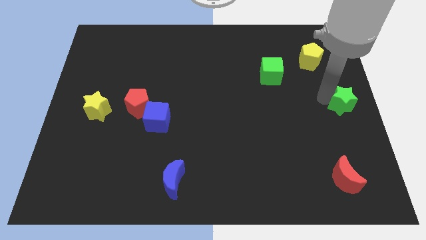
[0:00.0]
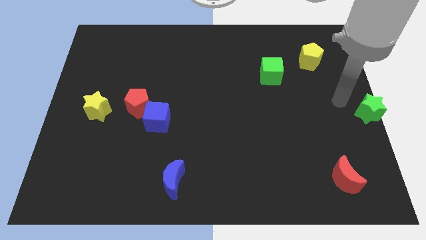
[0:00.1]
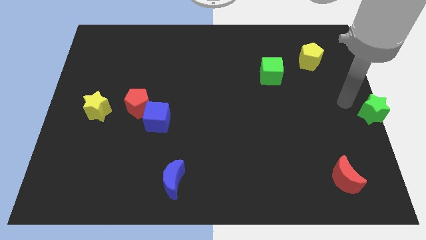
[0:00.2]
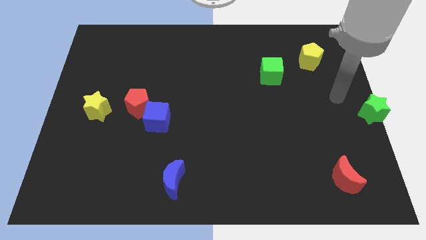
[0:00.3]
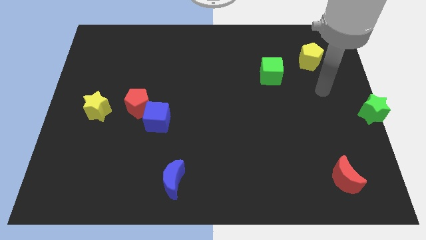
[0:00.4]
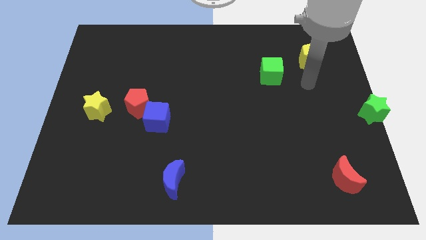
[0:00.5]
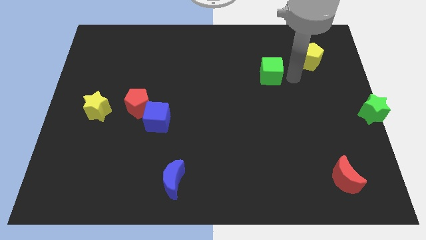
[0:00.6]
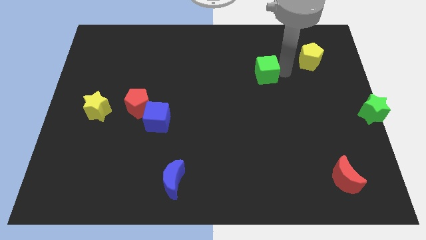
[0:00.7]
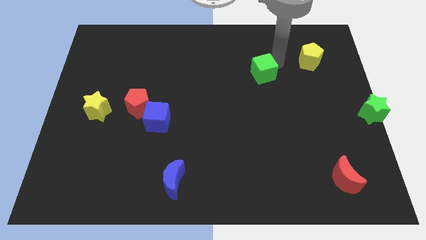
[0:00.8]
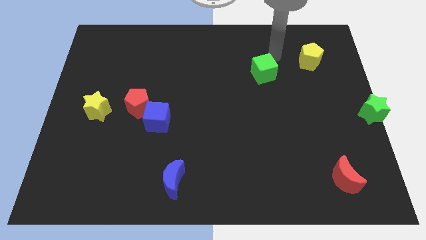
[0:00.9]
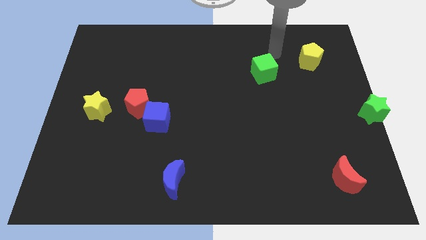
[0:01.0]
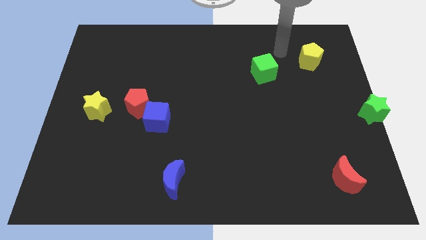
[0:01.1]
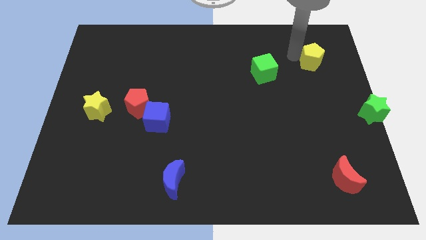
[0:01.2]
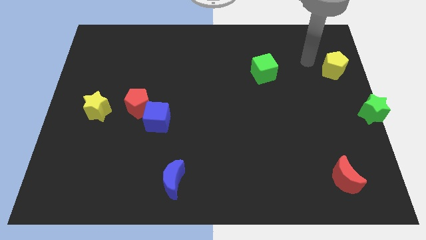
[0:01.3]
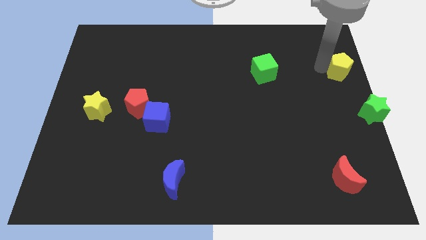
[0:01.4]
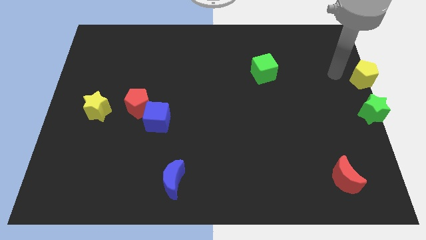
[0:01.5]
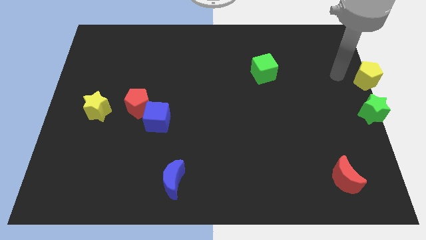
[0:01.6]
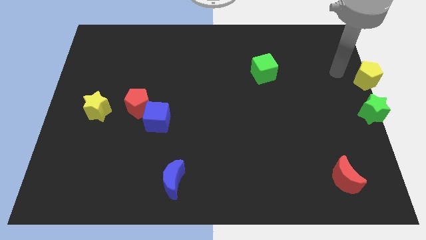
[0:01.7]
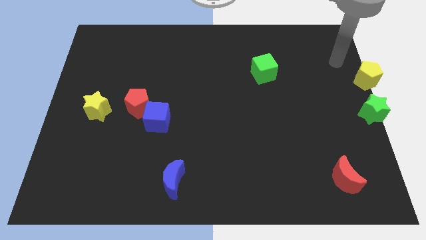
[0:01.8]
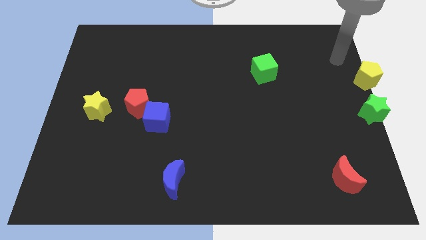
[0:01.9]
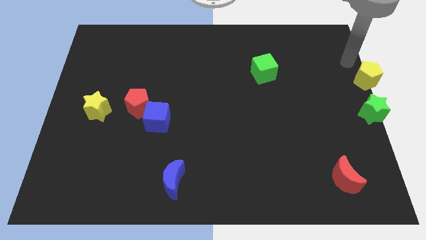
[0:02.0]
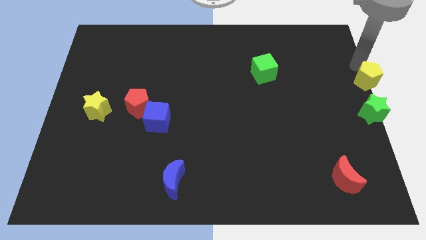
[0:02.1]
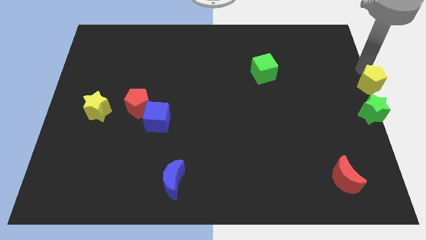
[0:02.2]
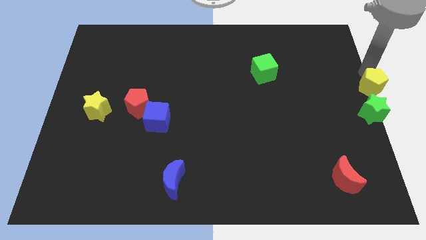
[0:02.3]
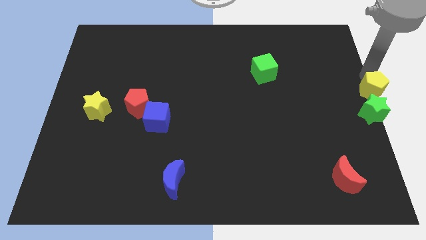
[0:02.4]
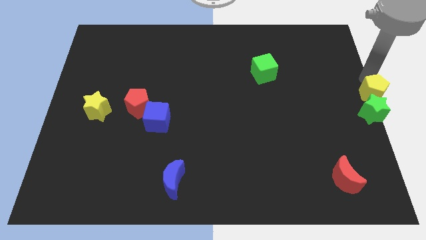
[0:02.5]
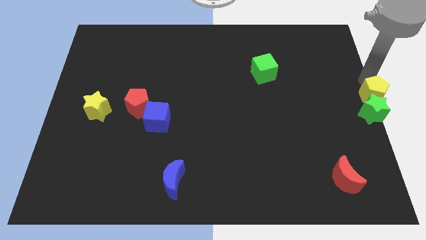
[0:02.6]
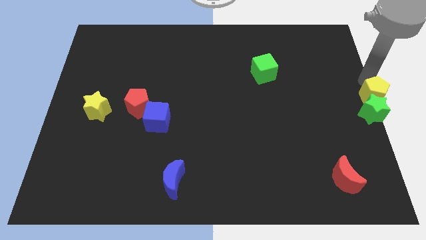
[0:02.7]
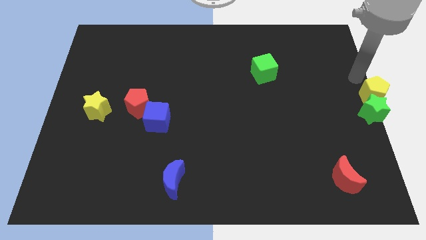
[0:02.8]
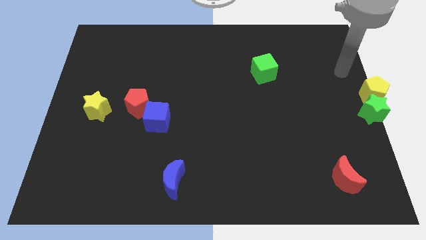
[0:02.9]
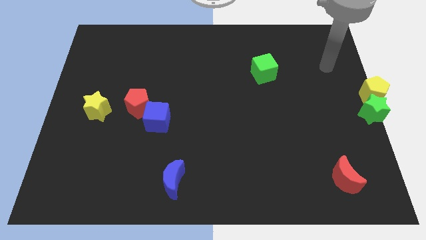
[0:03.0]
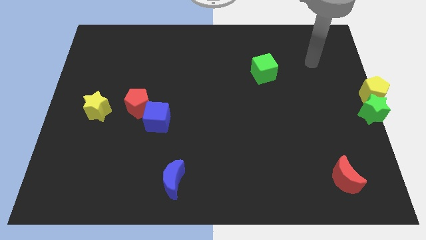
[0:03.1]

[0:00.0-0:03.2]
place the yellow pentagon above the green star

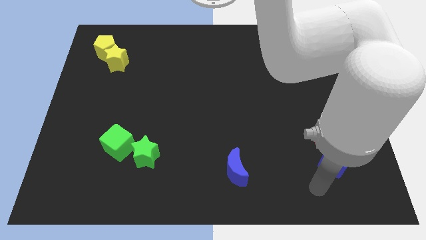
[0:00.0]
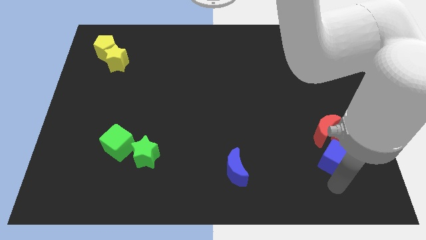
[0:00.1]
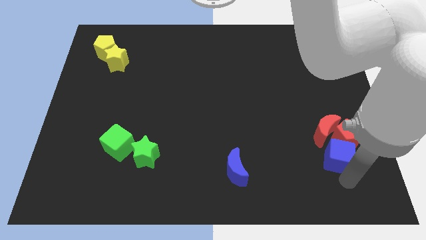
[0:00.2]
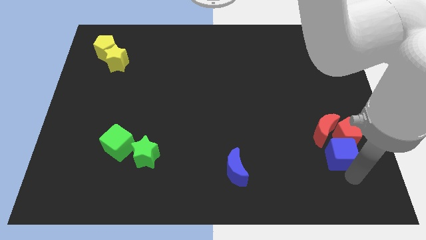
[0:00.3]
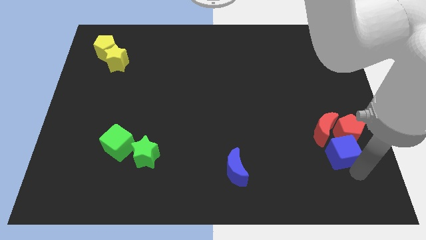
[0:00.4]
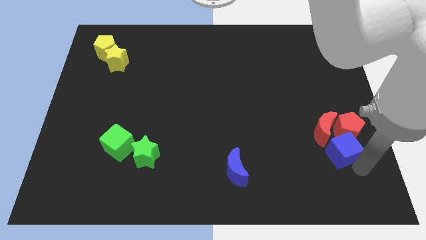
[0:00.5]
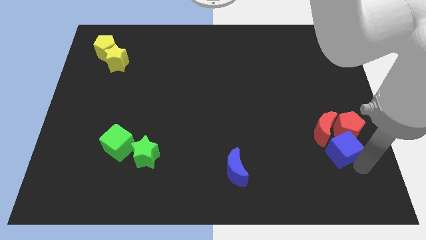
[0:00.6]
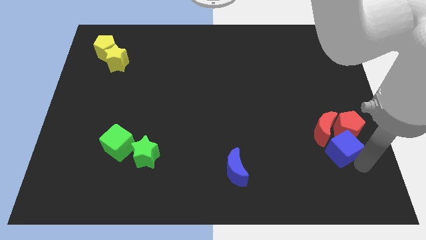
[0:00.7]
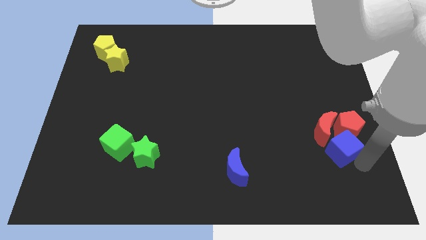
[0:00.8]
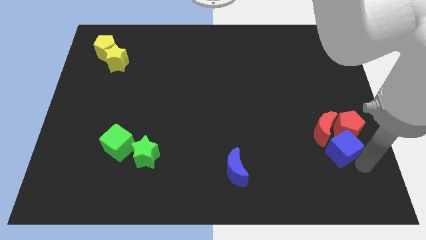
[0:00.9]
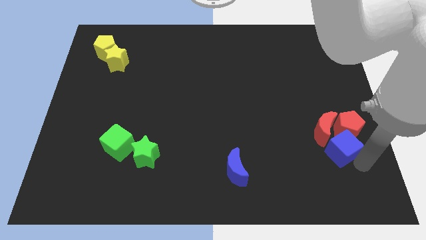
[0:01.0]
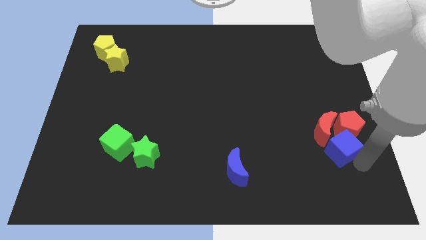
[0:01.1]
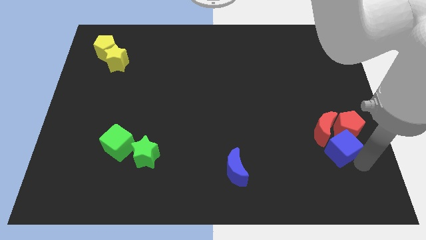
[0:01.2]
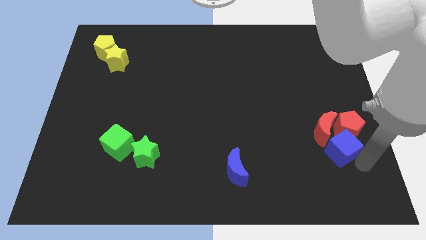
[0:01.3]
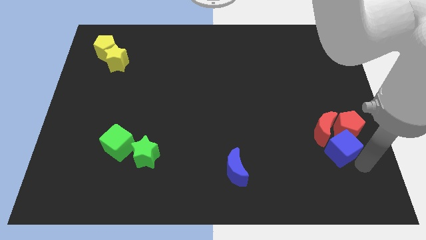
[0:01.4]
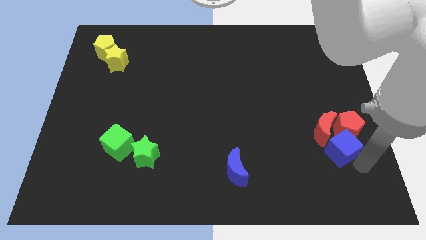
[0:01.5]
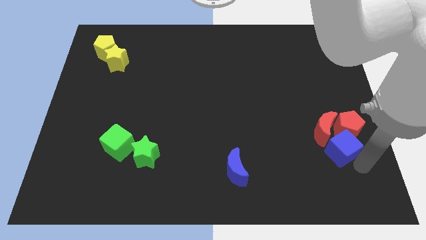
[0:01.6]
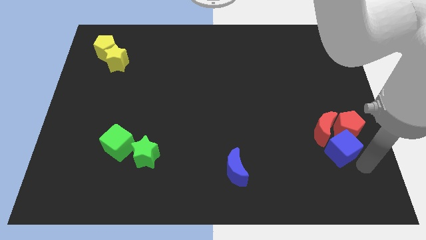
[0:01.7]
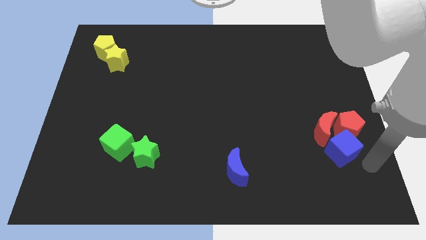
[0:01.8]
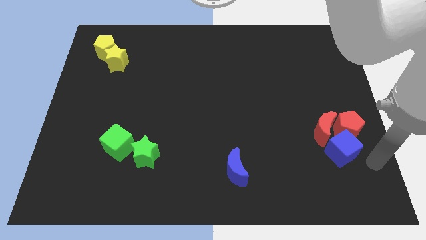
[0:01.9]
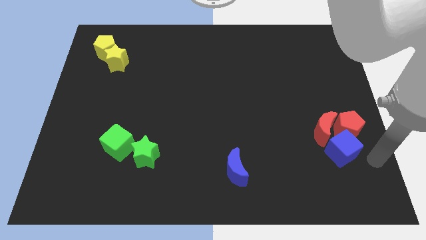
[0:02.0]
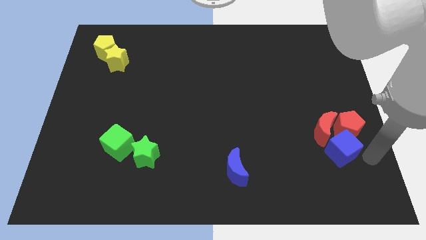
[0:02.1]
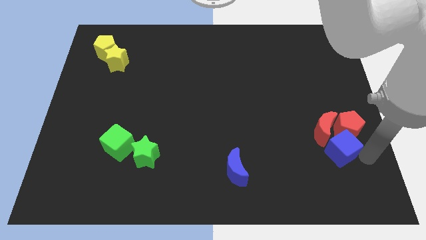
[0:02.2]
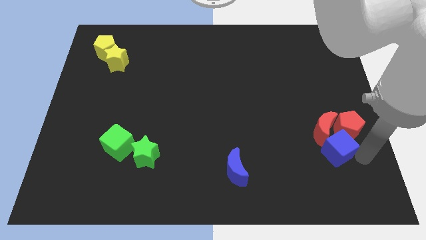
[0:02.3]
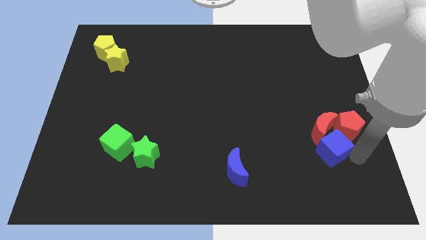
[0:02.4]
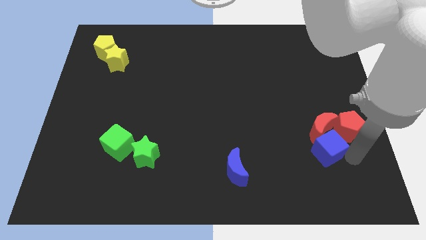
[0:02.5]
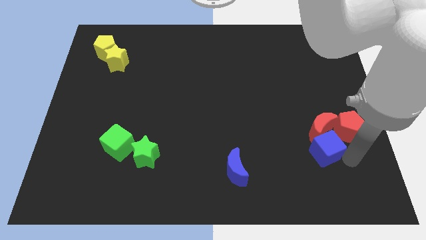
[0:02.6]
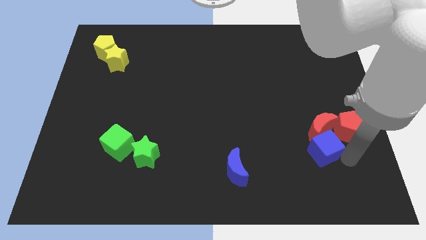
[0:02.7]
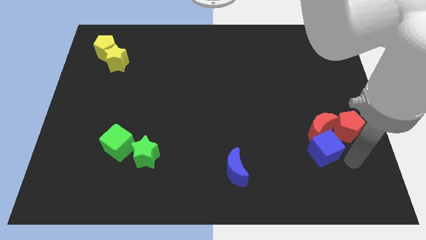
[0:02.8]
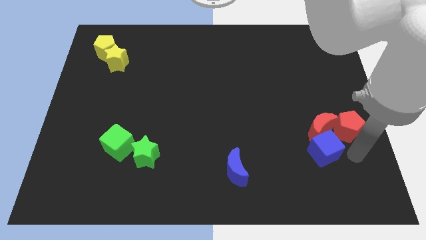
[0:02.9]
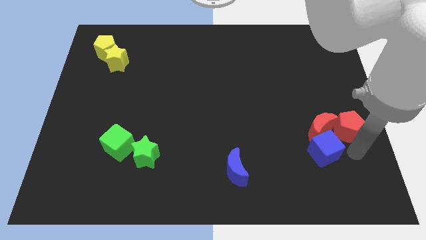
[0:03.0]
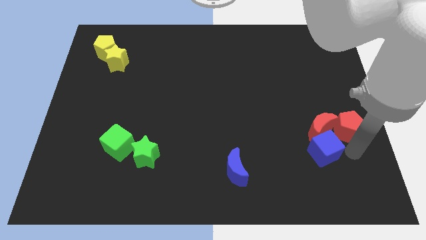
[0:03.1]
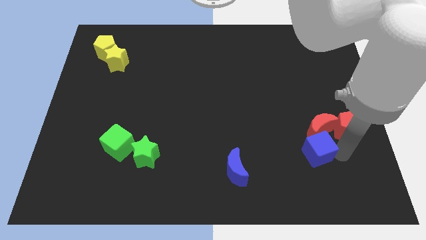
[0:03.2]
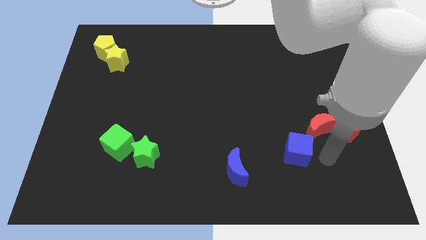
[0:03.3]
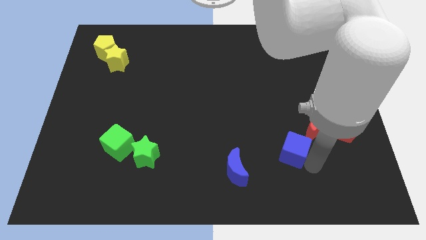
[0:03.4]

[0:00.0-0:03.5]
push the blue cube to the bottom left to the red crescent

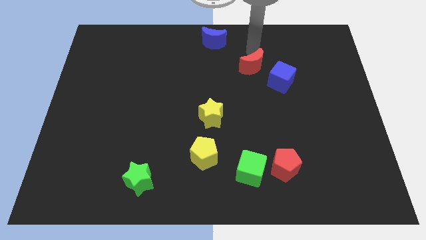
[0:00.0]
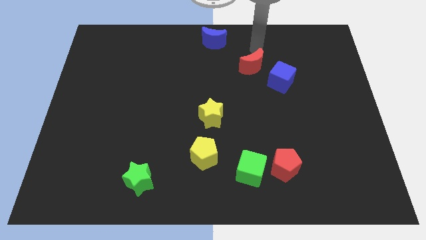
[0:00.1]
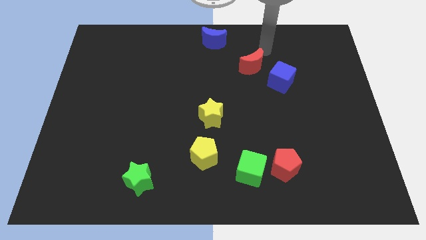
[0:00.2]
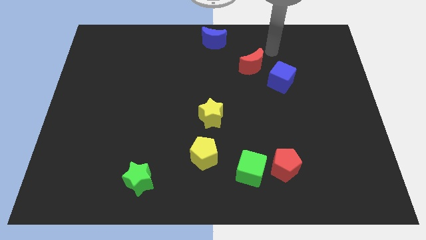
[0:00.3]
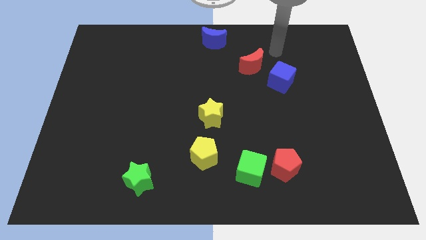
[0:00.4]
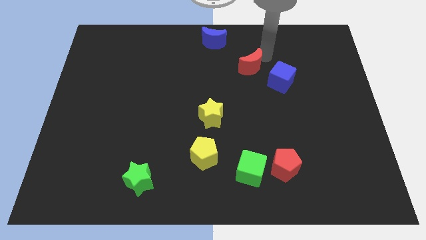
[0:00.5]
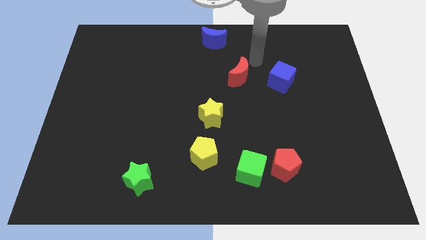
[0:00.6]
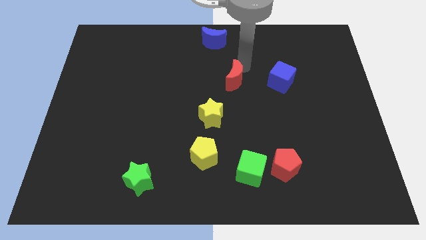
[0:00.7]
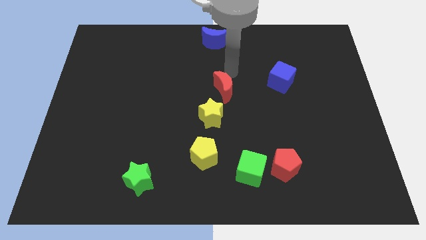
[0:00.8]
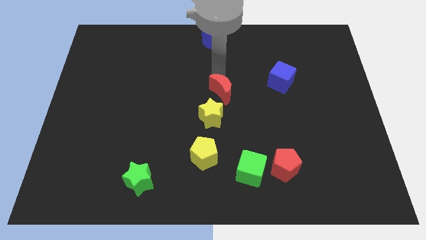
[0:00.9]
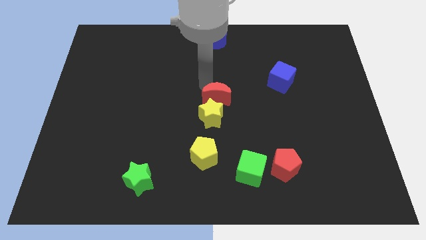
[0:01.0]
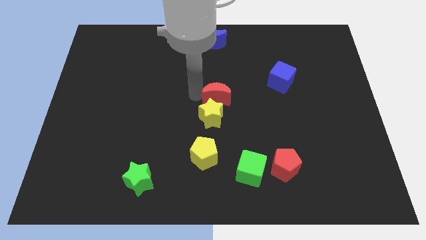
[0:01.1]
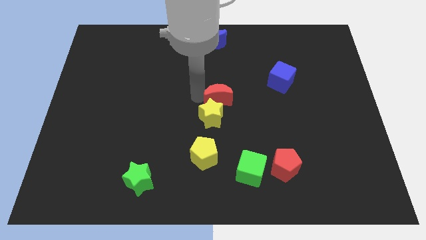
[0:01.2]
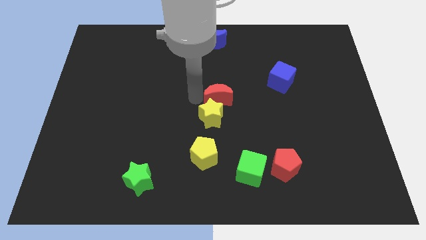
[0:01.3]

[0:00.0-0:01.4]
place red moon above the yellow star

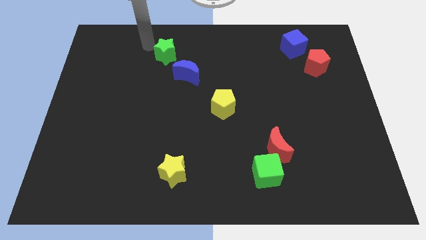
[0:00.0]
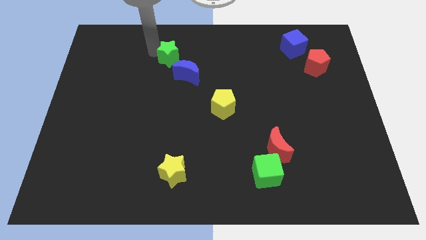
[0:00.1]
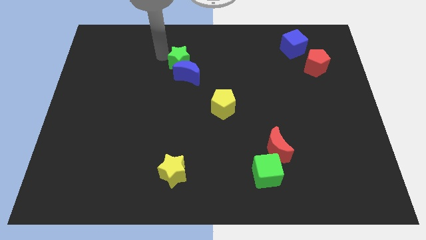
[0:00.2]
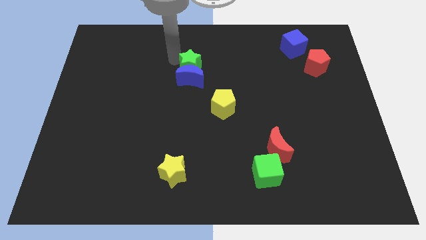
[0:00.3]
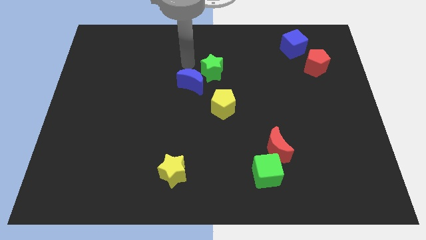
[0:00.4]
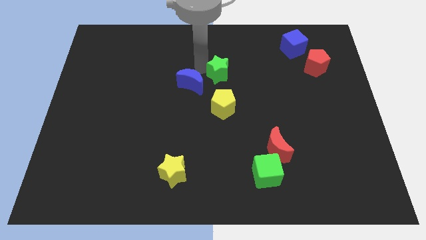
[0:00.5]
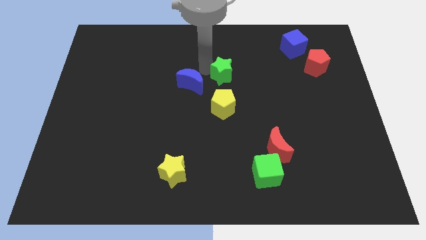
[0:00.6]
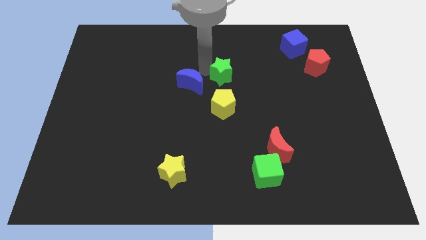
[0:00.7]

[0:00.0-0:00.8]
push the green star into the blue crescent

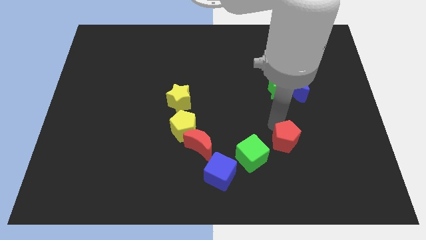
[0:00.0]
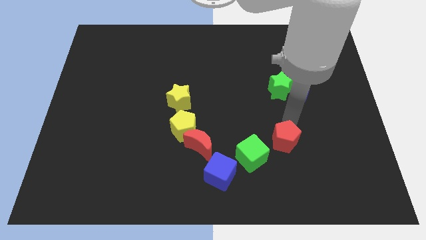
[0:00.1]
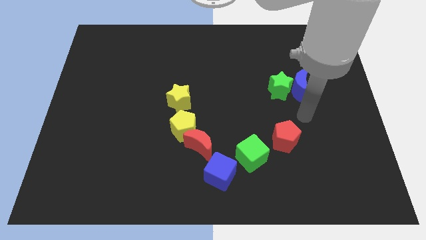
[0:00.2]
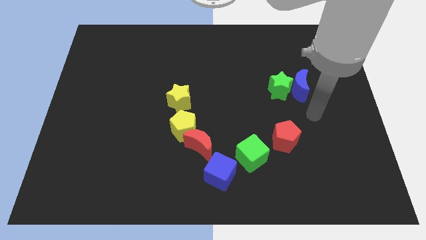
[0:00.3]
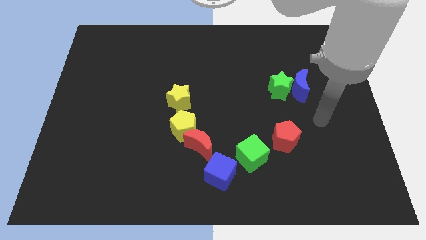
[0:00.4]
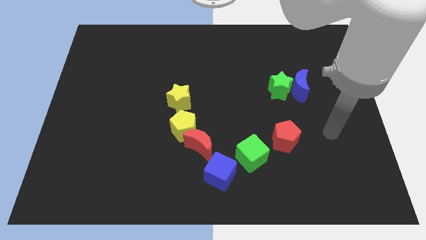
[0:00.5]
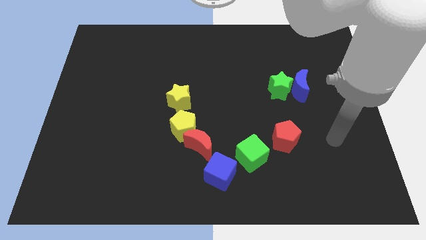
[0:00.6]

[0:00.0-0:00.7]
move the arm away from the red pentagon
